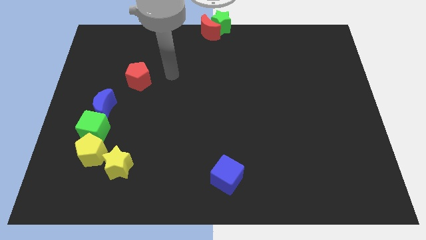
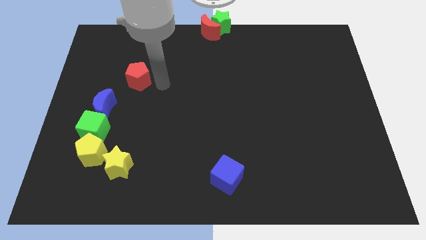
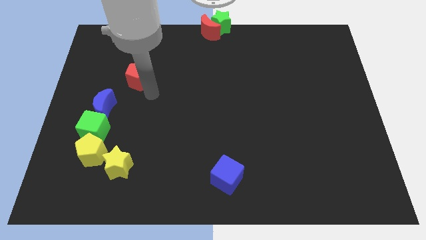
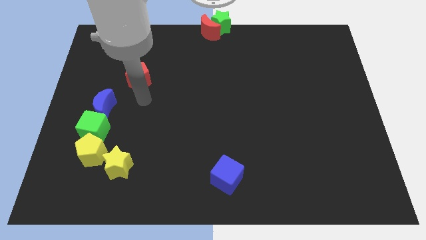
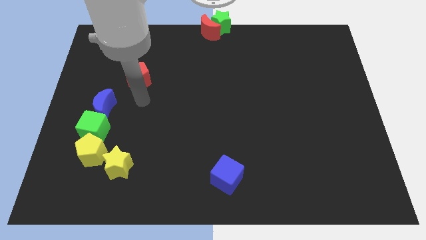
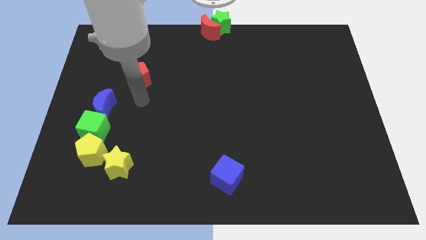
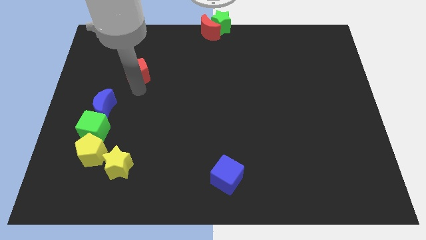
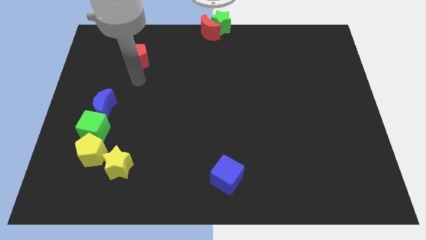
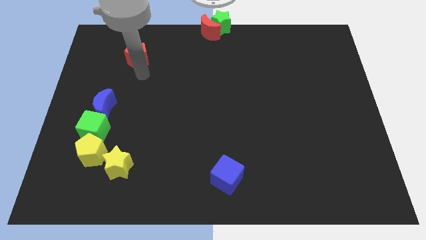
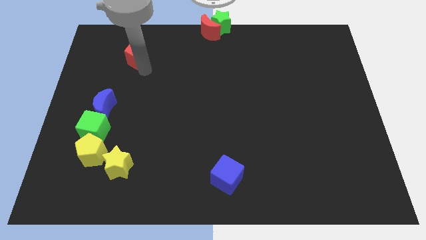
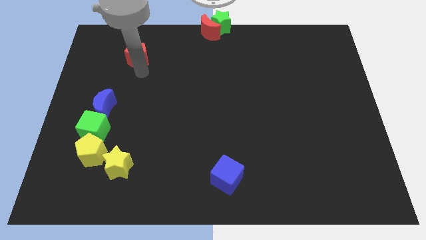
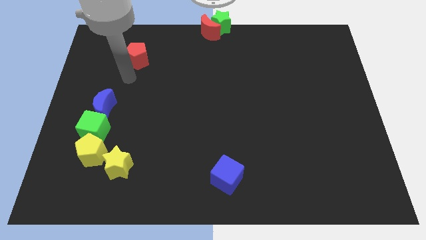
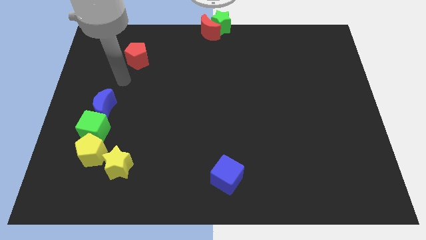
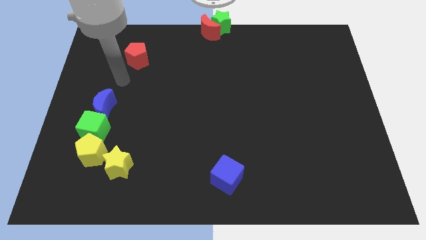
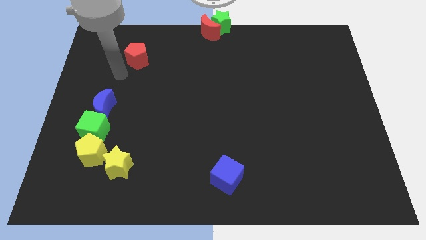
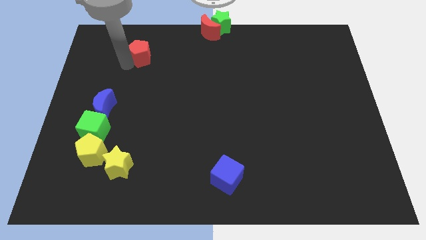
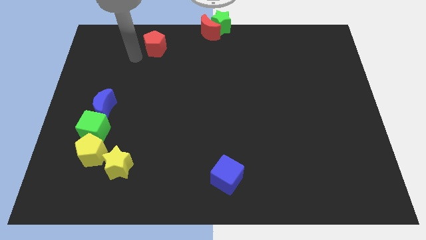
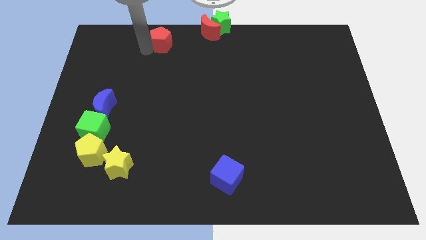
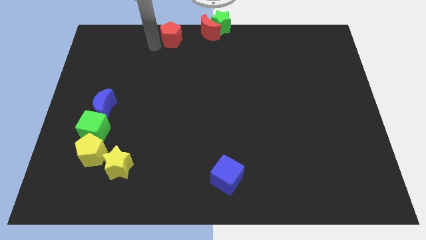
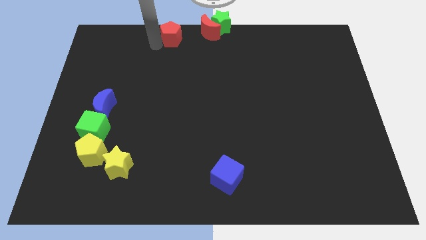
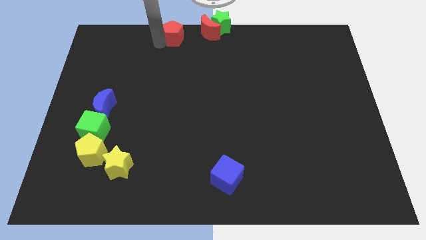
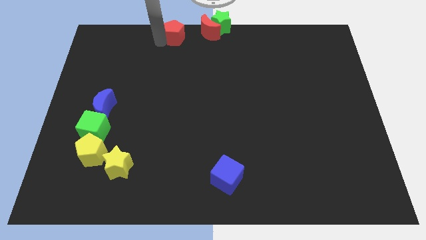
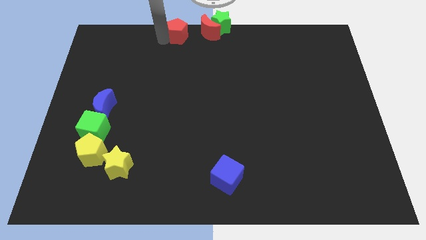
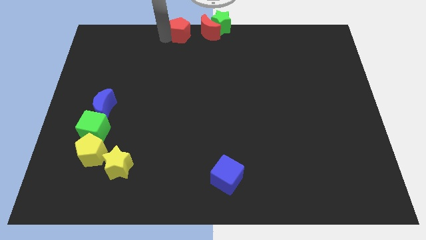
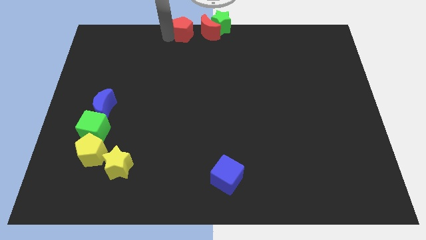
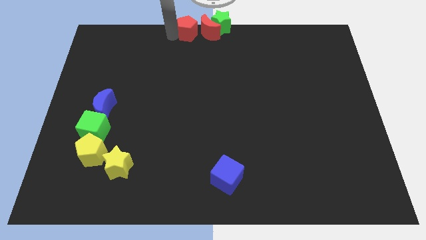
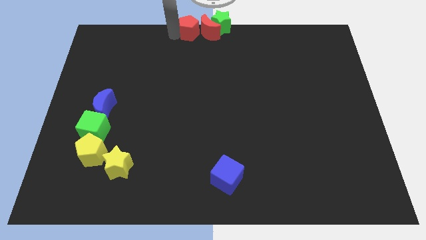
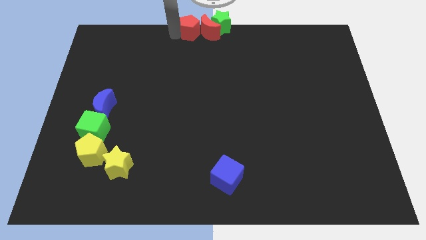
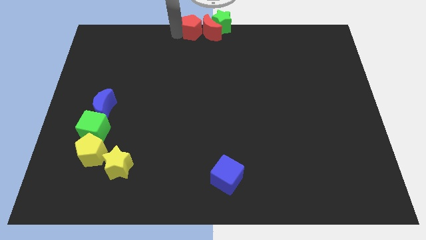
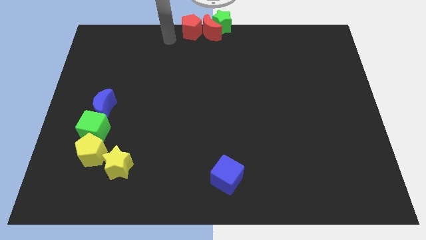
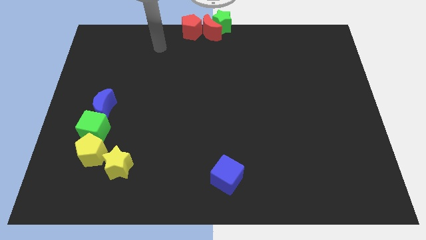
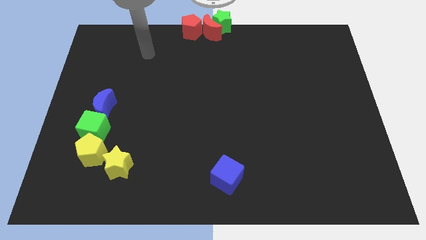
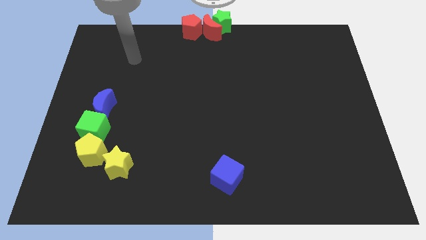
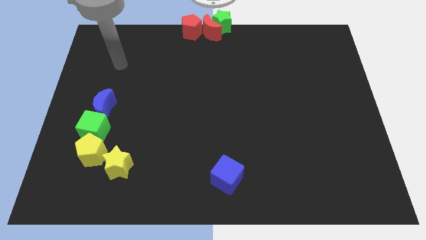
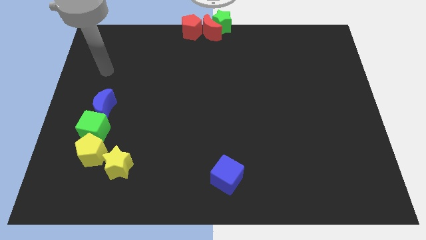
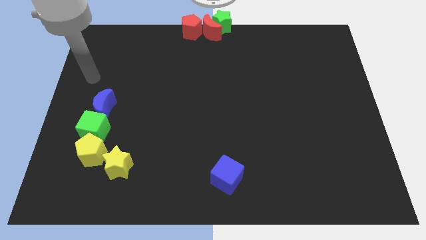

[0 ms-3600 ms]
push the red pentagon close to the left of red moon

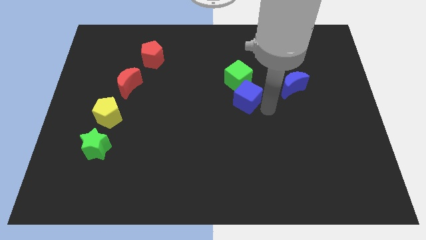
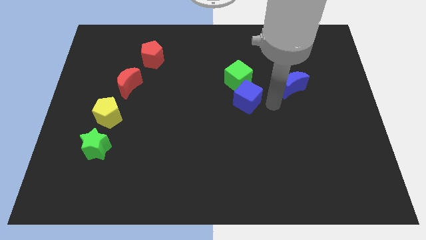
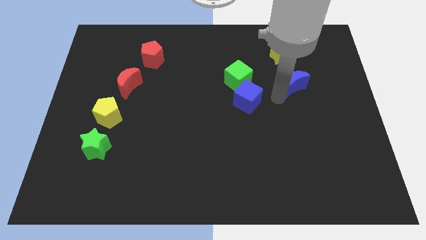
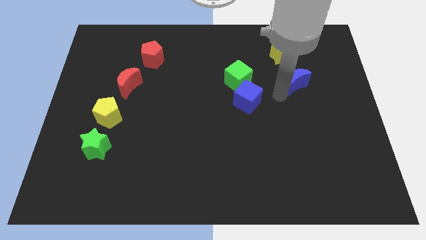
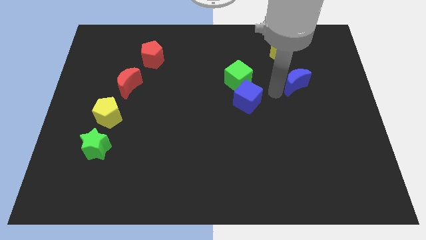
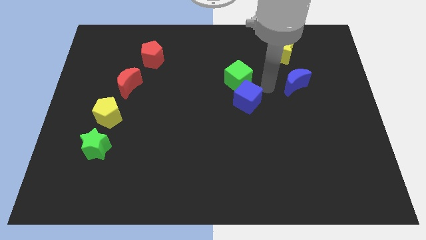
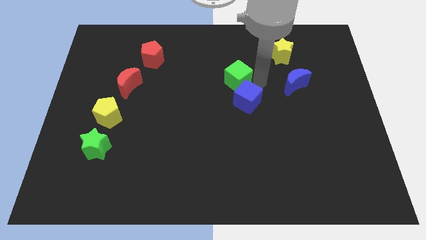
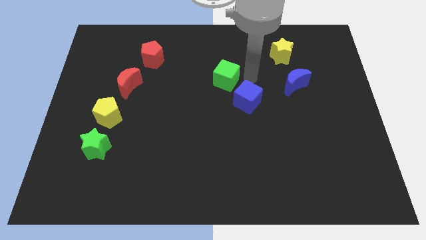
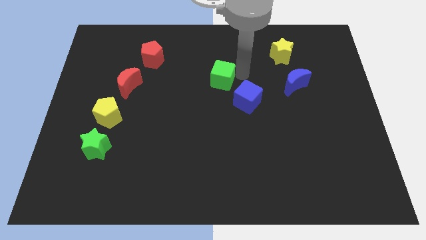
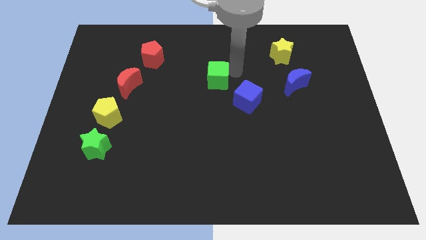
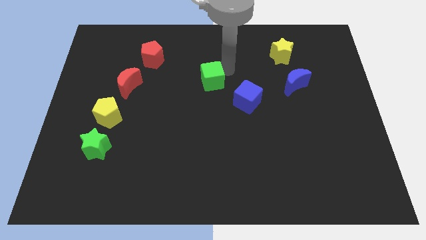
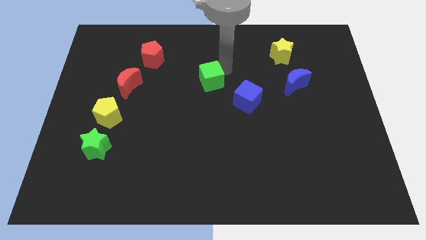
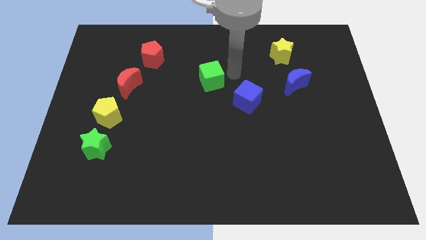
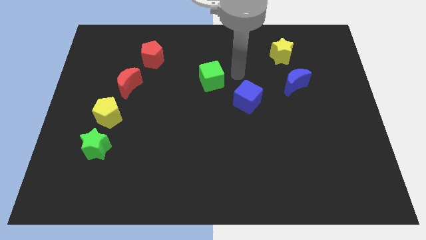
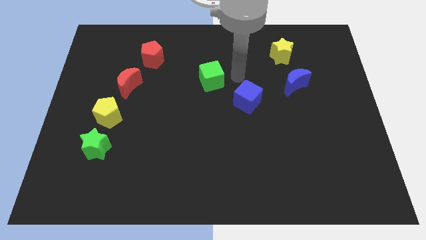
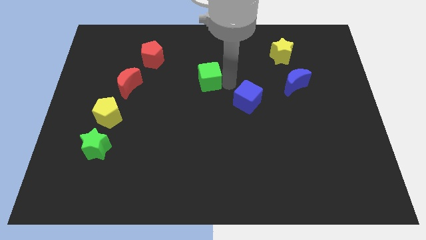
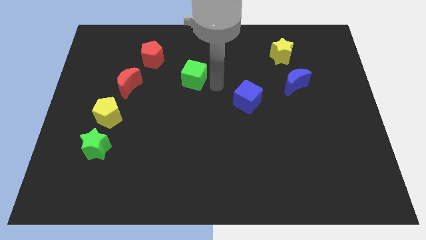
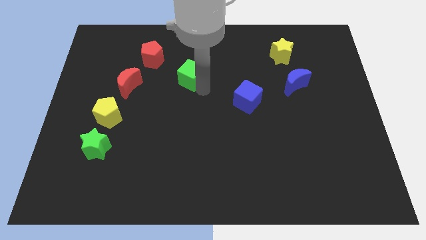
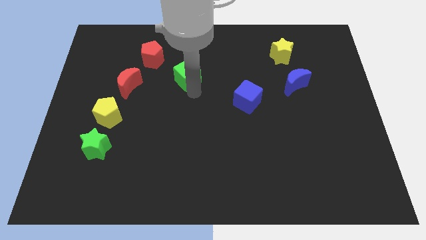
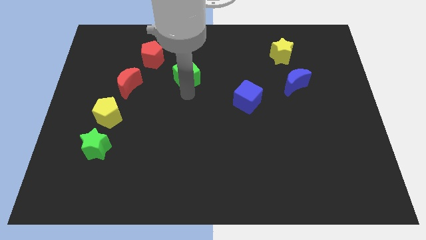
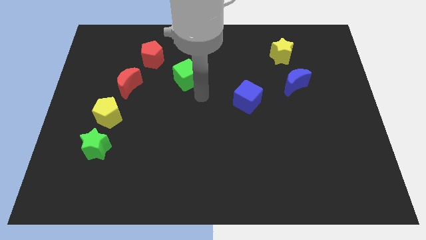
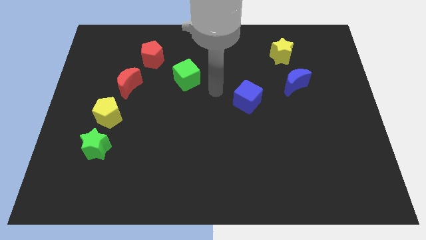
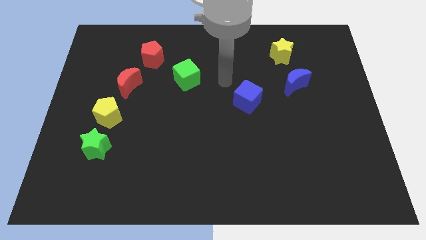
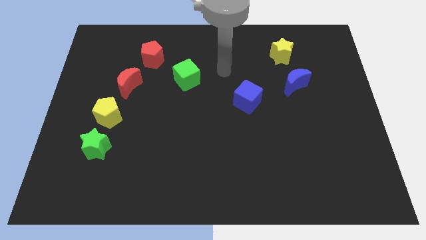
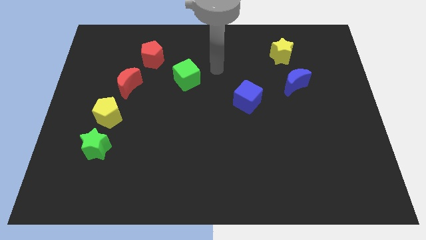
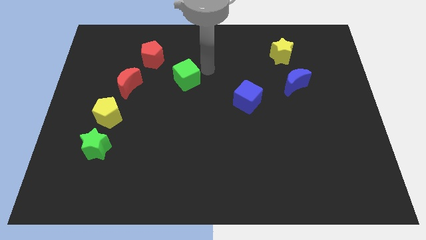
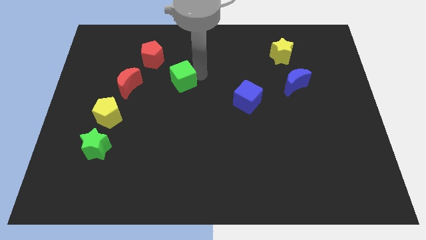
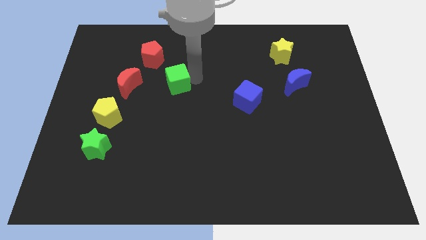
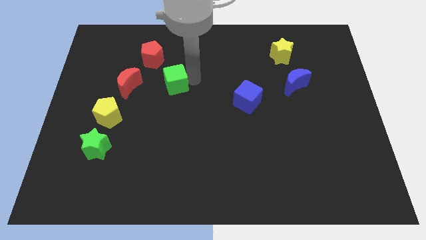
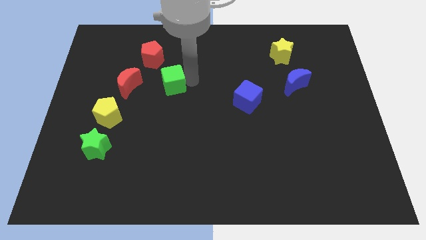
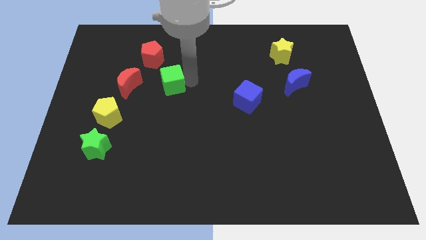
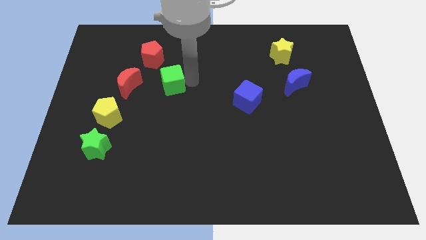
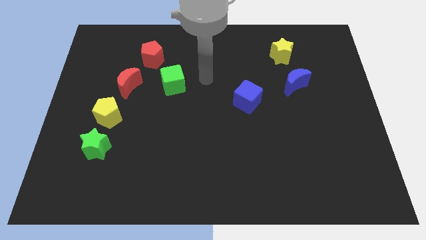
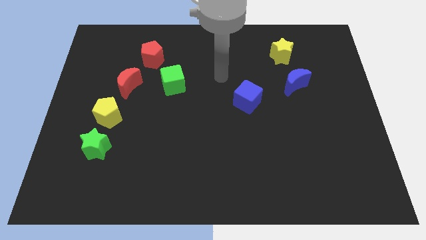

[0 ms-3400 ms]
move the green cube at the bottom right of the red pentagon

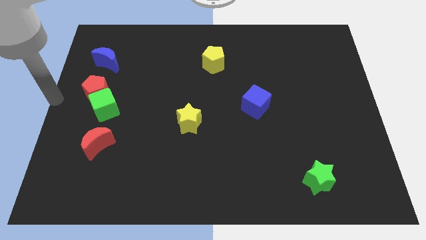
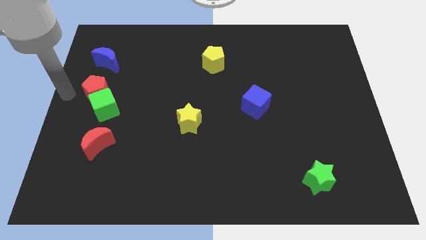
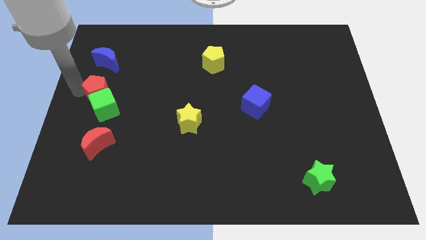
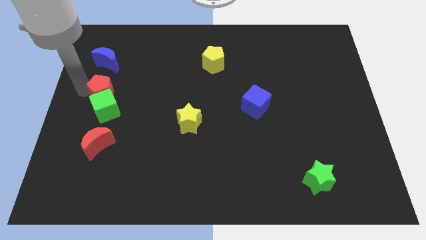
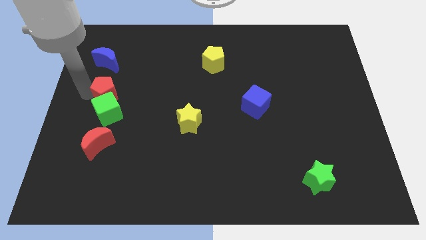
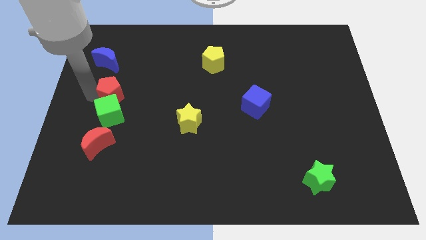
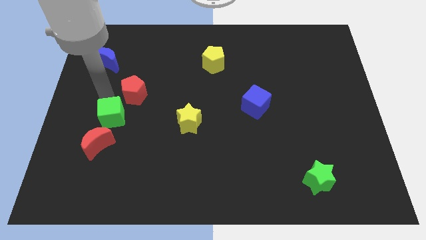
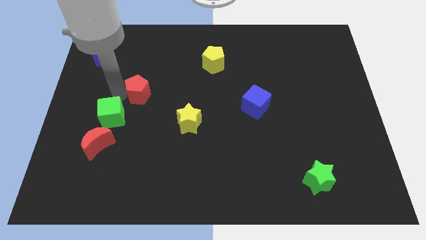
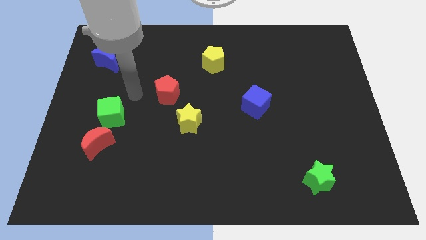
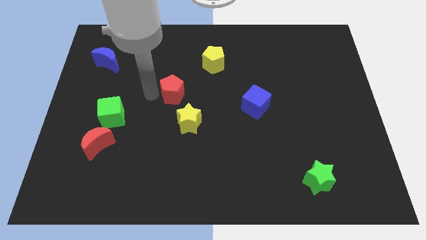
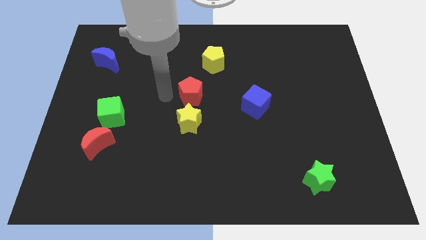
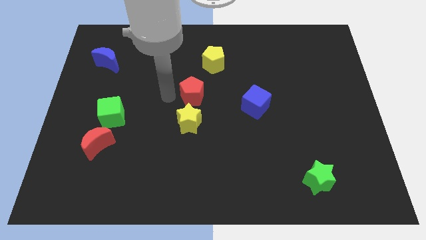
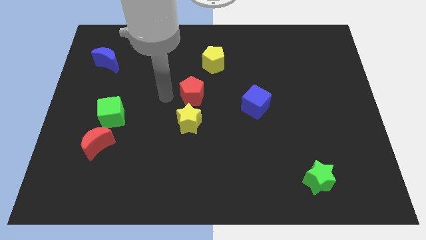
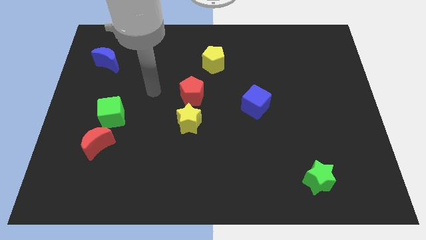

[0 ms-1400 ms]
separate the red pentagon from green cube

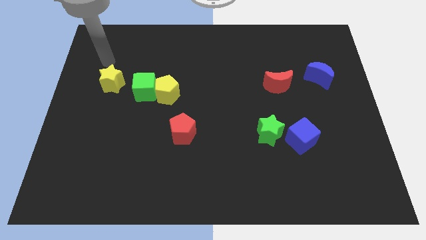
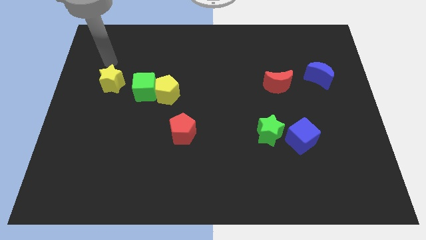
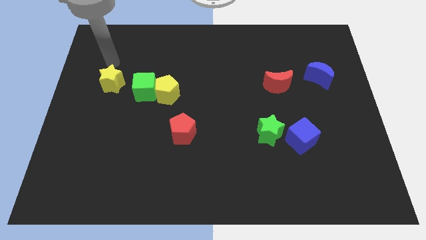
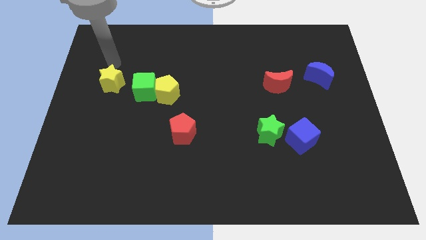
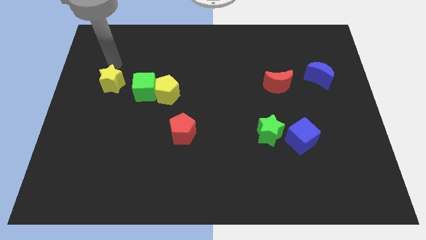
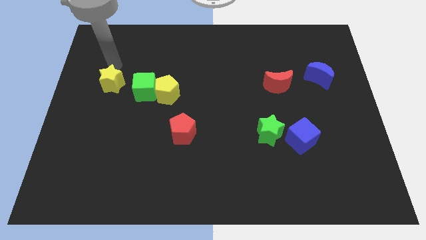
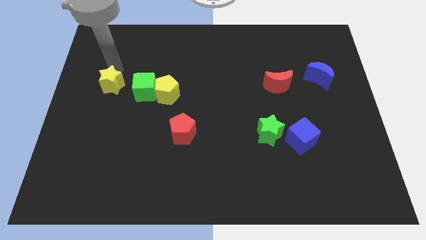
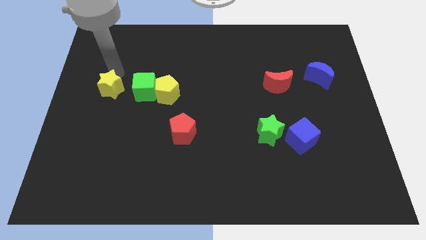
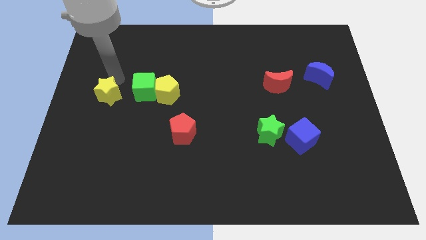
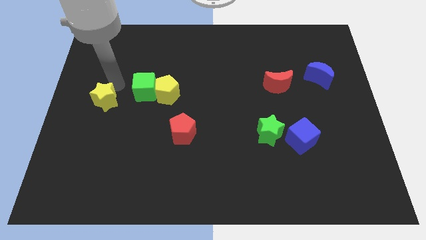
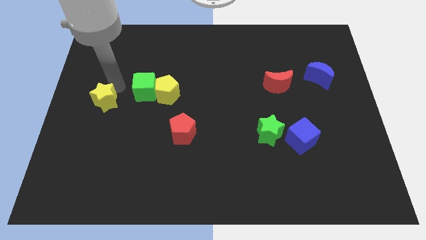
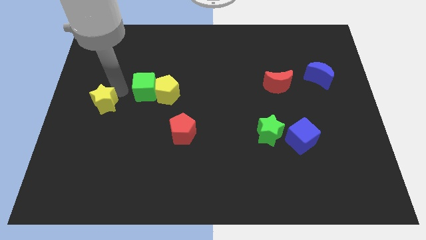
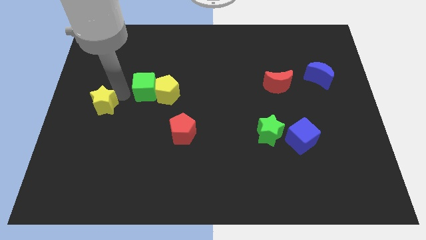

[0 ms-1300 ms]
push the yellow star to the bottom side
